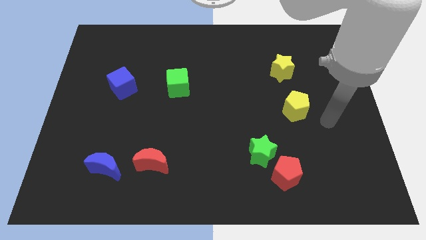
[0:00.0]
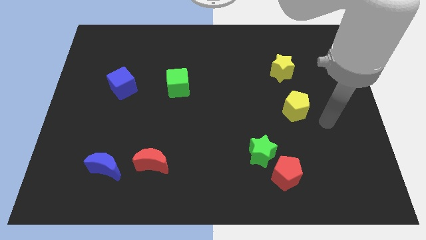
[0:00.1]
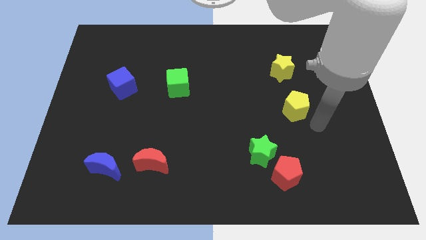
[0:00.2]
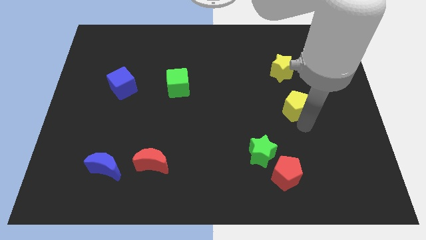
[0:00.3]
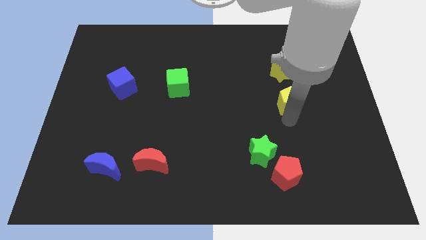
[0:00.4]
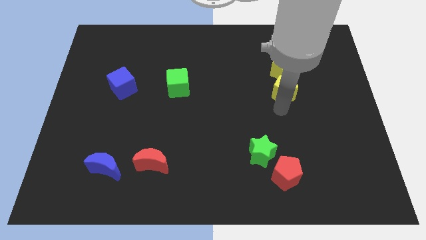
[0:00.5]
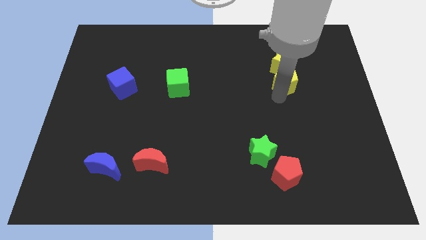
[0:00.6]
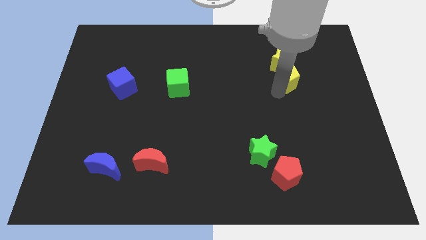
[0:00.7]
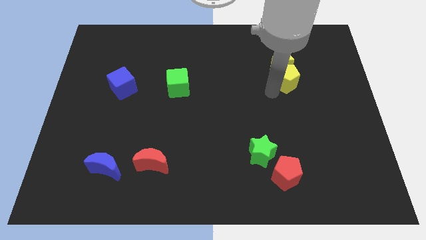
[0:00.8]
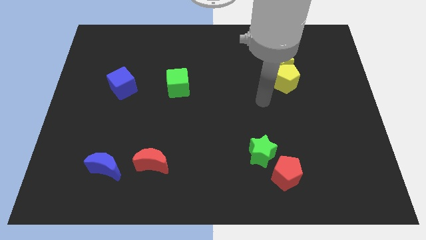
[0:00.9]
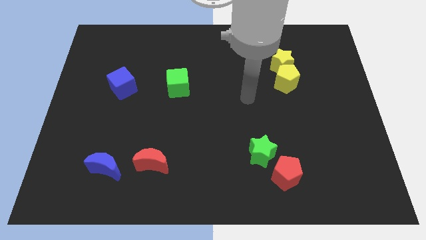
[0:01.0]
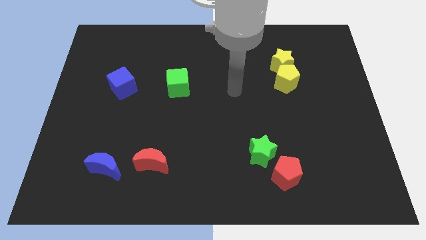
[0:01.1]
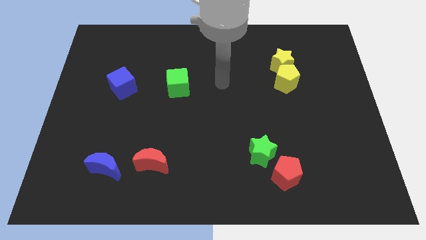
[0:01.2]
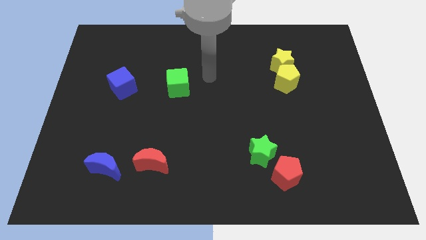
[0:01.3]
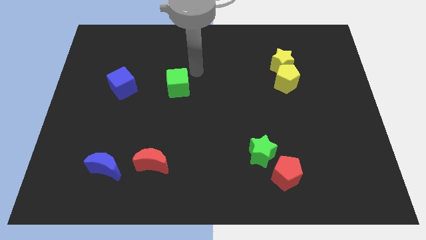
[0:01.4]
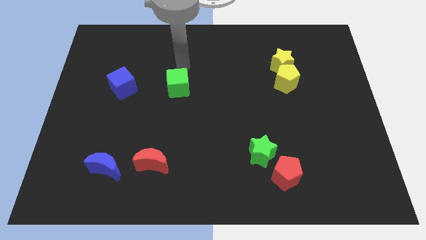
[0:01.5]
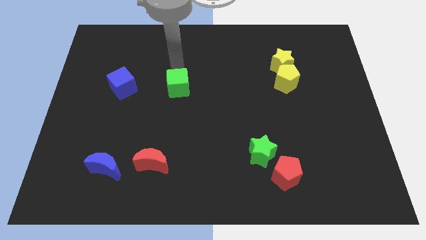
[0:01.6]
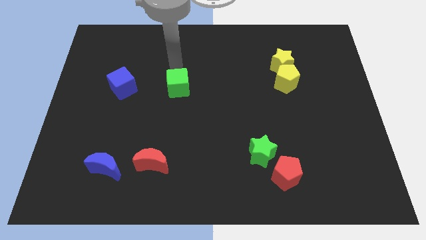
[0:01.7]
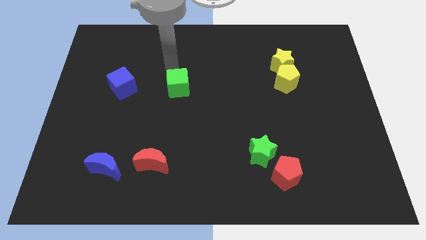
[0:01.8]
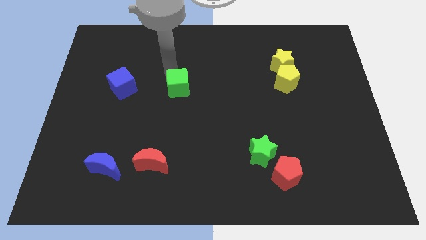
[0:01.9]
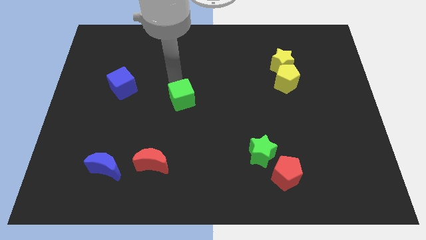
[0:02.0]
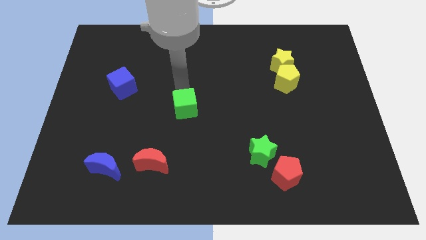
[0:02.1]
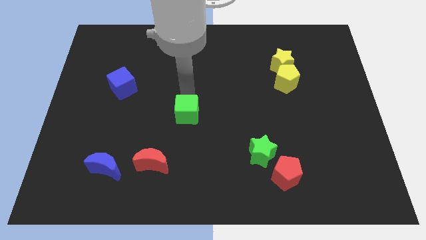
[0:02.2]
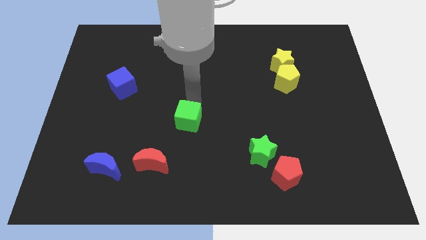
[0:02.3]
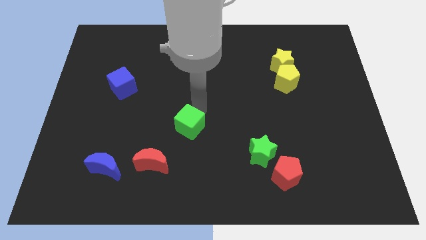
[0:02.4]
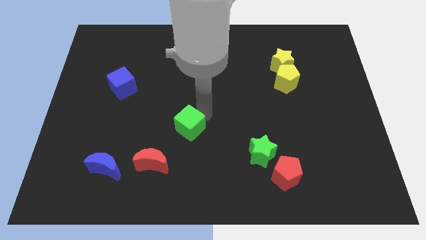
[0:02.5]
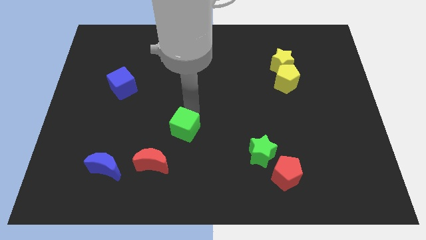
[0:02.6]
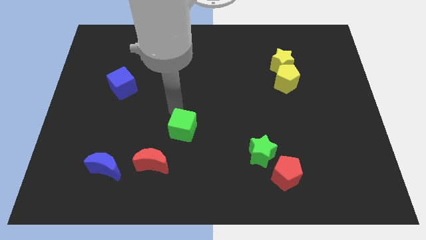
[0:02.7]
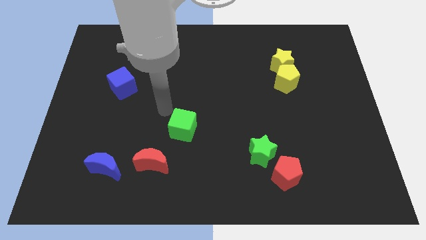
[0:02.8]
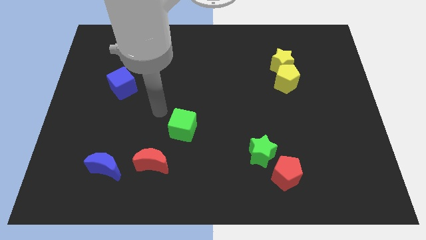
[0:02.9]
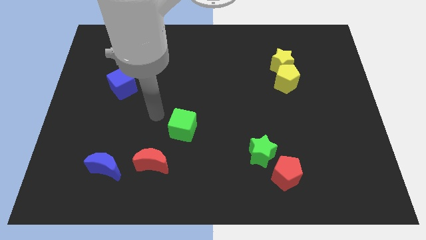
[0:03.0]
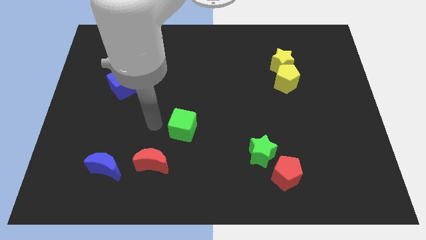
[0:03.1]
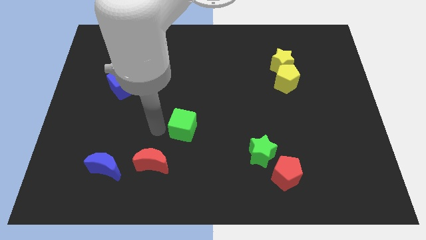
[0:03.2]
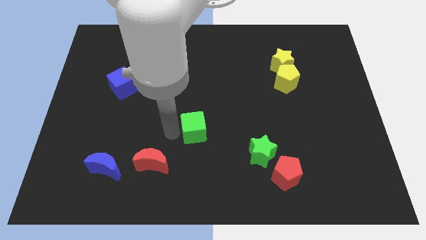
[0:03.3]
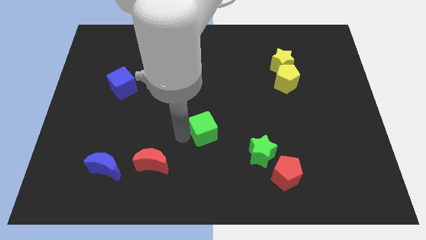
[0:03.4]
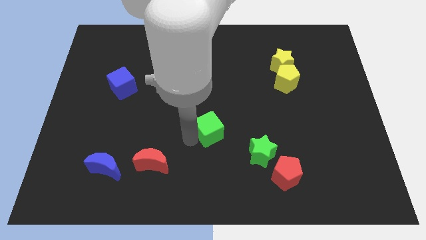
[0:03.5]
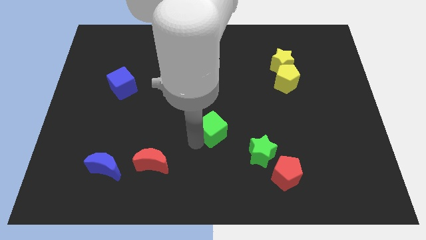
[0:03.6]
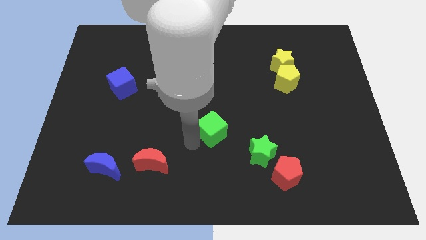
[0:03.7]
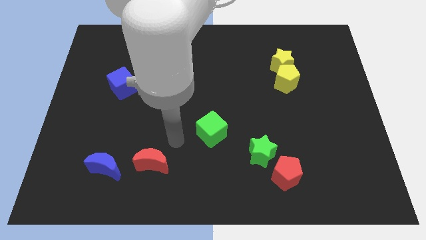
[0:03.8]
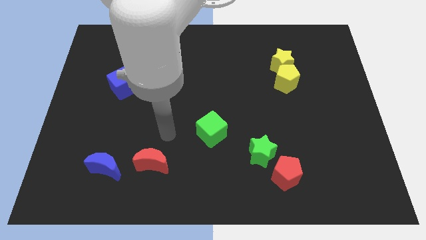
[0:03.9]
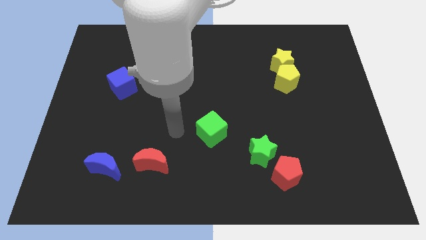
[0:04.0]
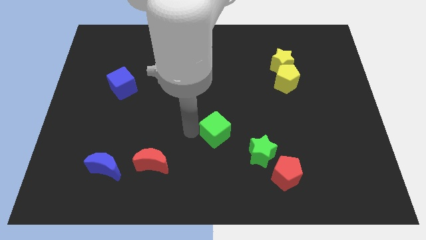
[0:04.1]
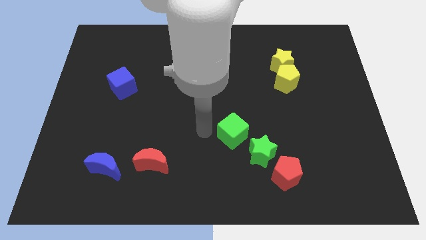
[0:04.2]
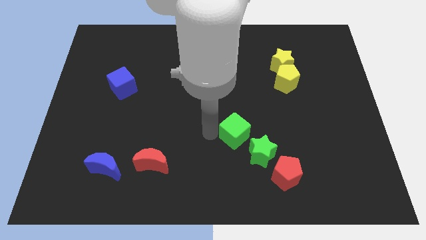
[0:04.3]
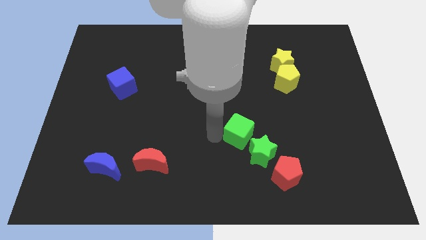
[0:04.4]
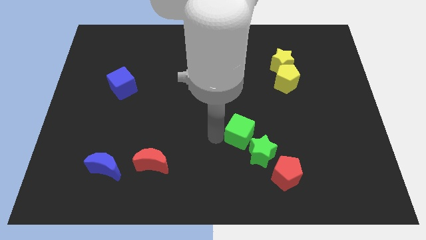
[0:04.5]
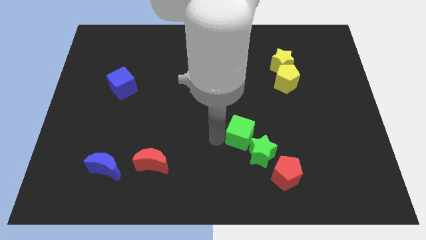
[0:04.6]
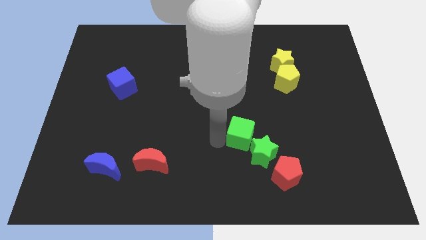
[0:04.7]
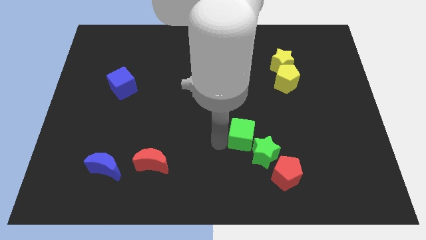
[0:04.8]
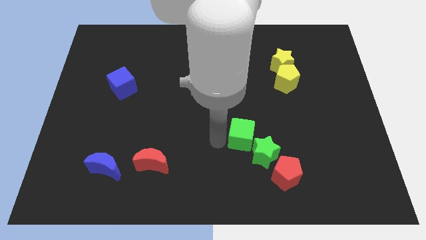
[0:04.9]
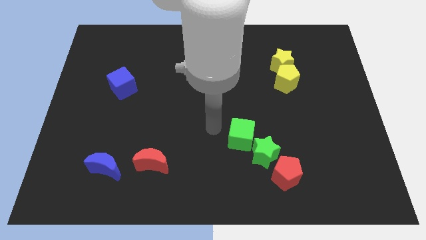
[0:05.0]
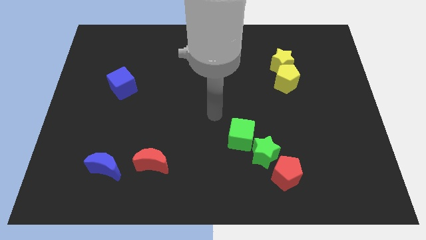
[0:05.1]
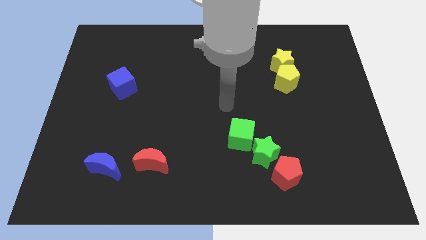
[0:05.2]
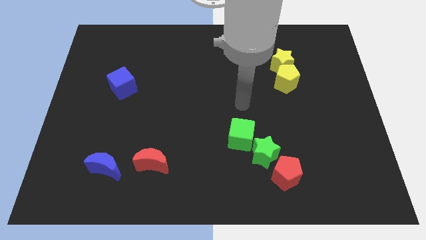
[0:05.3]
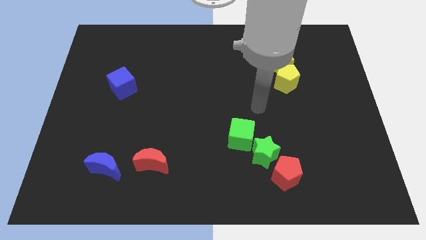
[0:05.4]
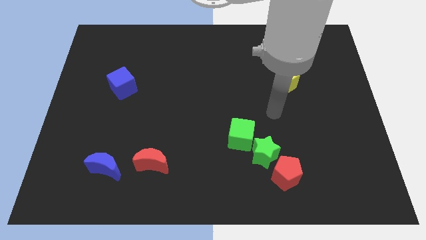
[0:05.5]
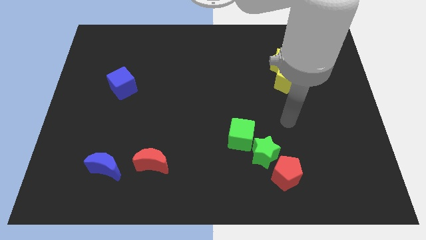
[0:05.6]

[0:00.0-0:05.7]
move the green cube close to the green star

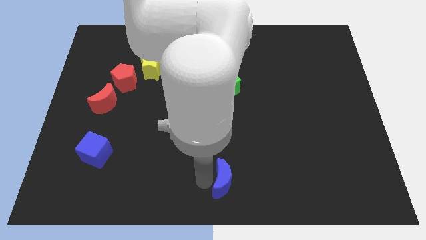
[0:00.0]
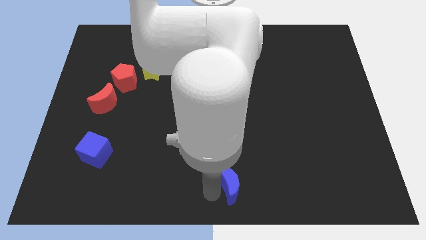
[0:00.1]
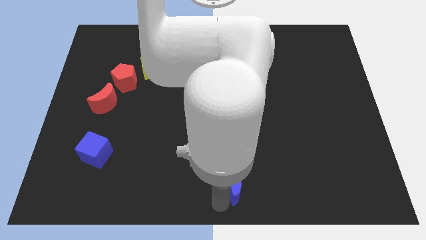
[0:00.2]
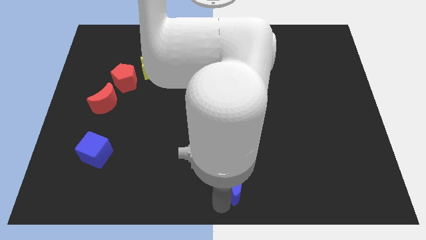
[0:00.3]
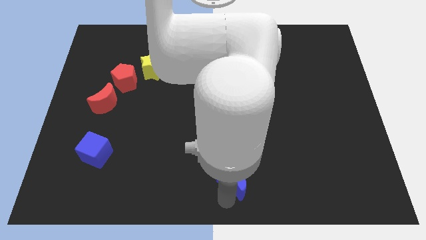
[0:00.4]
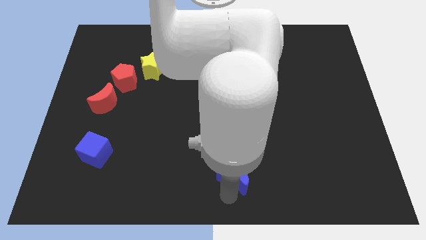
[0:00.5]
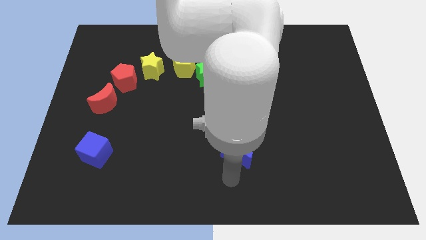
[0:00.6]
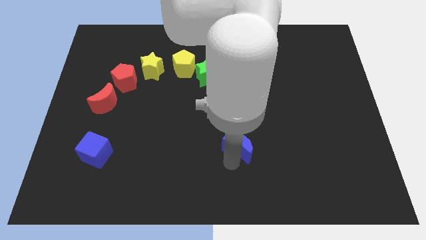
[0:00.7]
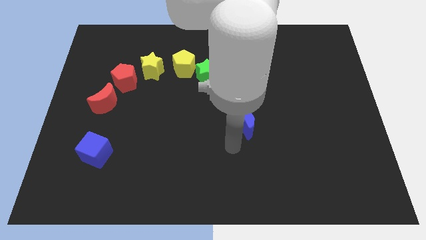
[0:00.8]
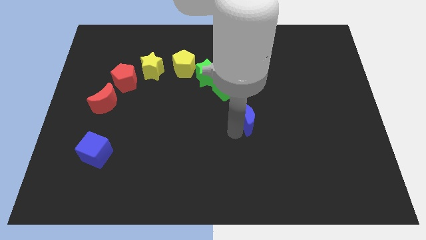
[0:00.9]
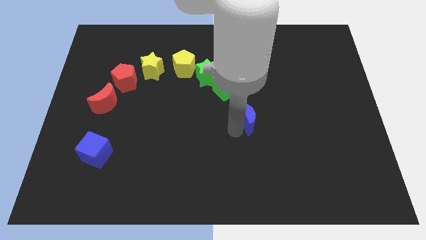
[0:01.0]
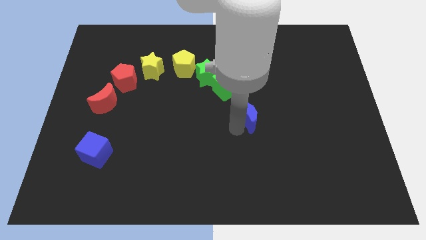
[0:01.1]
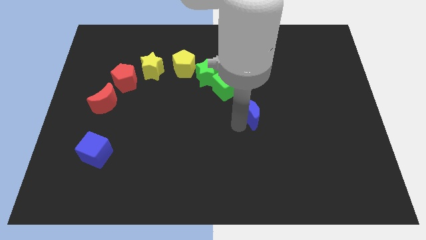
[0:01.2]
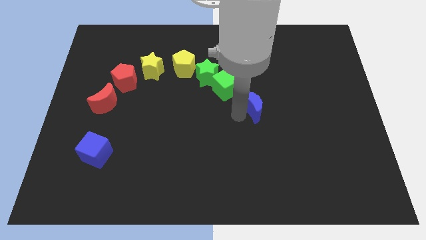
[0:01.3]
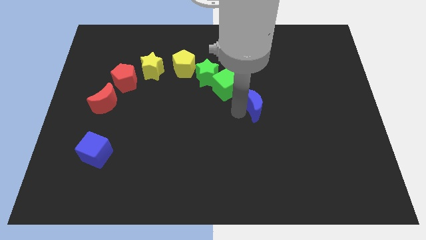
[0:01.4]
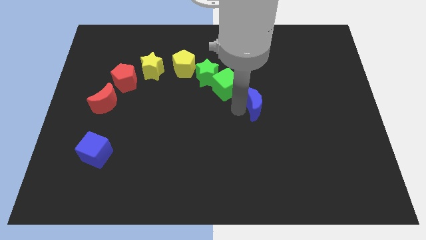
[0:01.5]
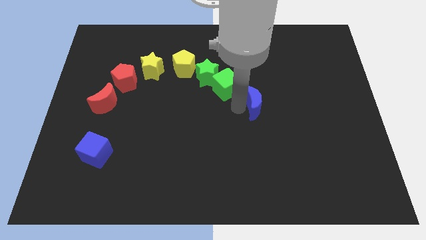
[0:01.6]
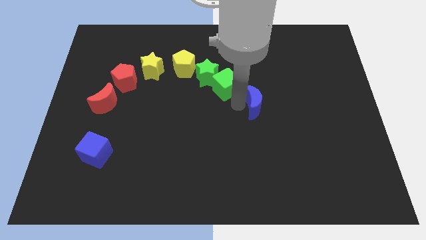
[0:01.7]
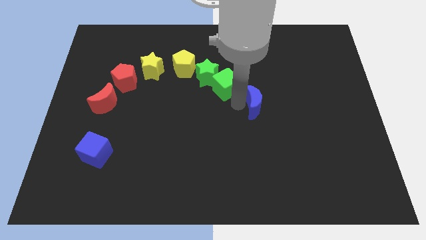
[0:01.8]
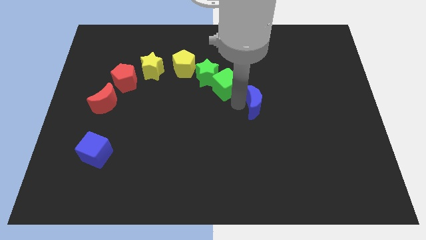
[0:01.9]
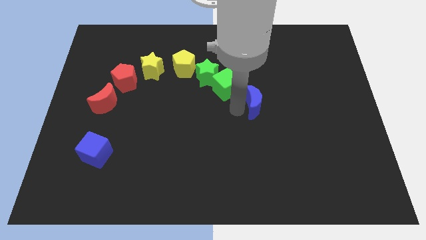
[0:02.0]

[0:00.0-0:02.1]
move the blue crescent below the green cube

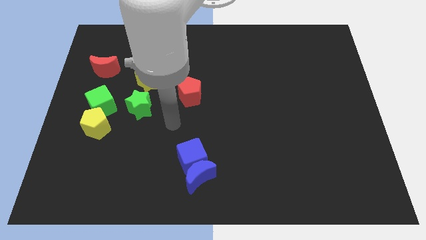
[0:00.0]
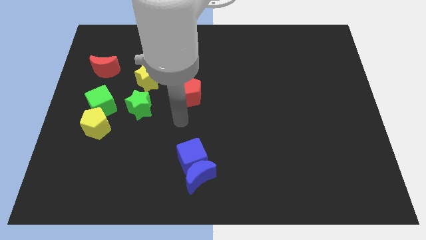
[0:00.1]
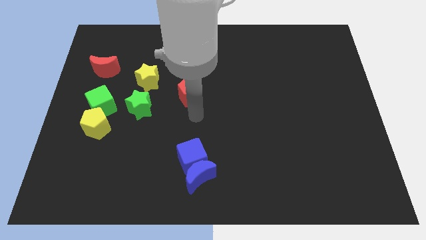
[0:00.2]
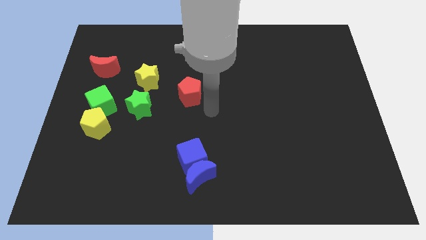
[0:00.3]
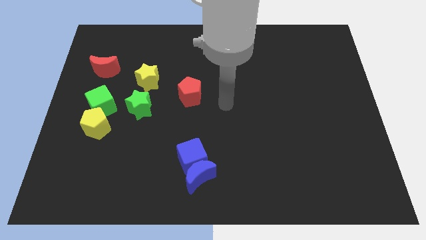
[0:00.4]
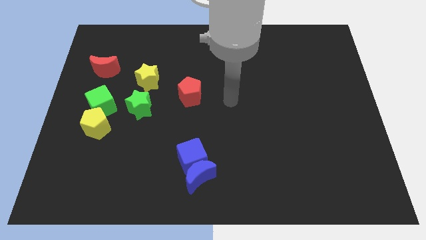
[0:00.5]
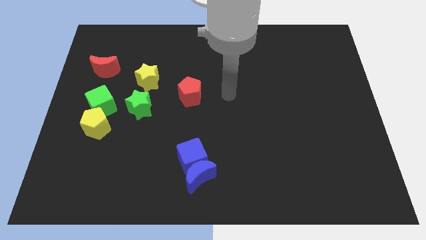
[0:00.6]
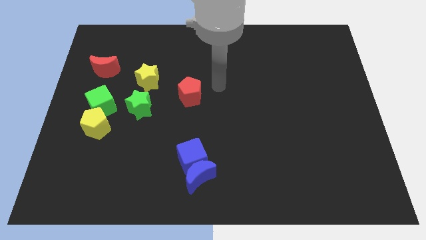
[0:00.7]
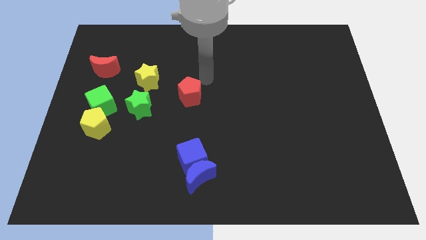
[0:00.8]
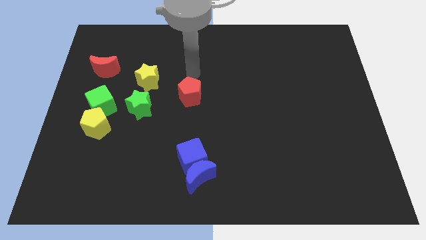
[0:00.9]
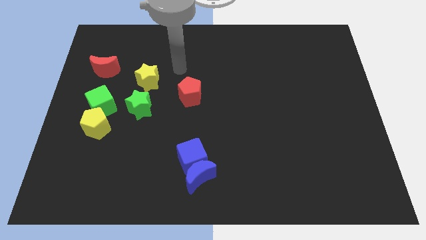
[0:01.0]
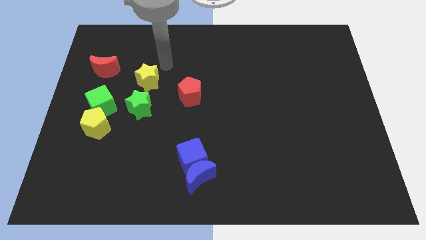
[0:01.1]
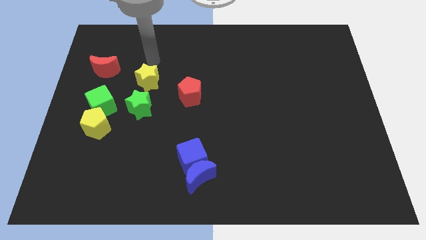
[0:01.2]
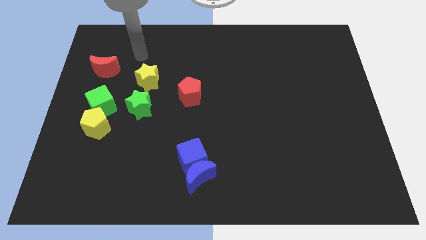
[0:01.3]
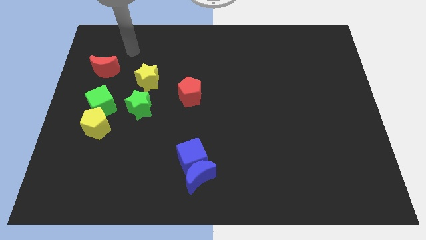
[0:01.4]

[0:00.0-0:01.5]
move your arm to the top of the yellow star
